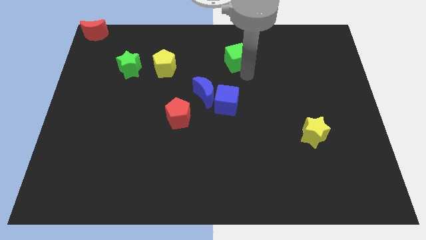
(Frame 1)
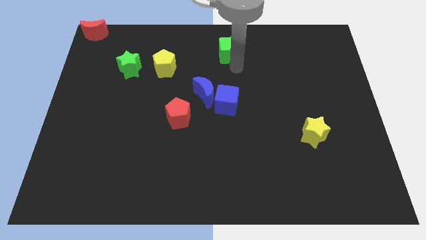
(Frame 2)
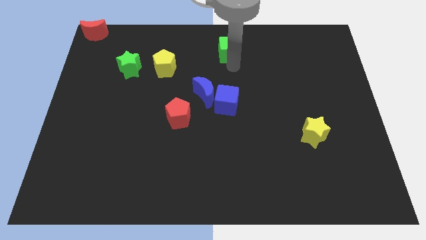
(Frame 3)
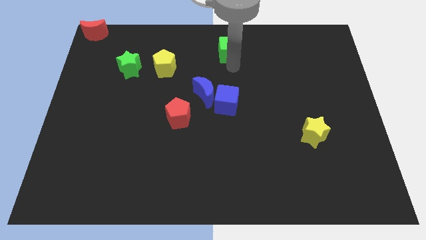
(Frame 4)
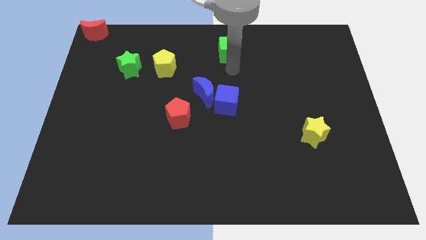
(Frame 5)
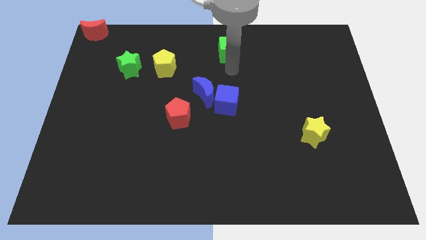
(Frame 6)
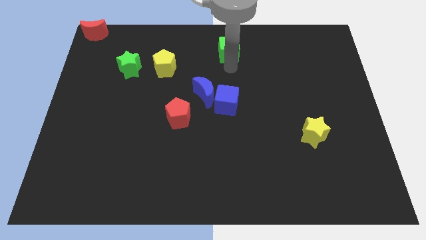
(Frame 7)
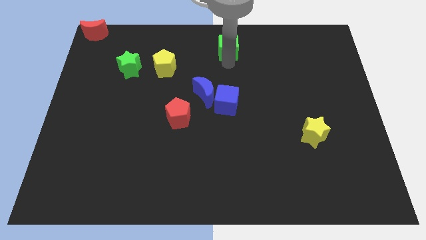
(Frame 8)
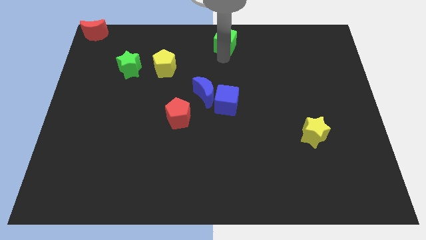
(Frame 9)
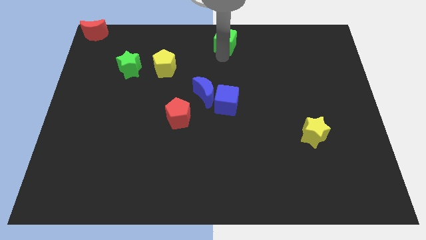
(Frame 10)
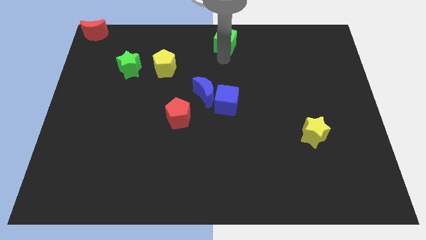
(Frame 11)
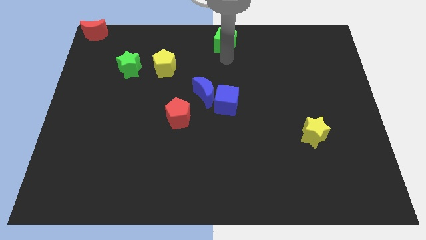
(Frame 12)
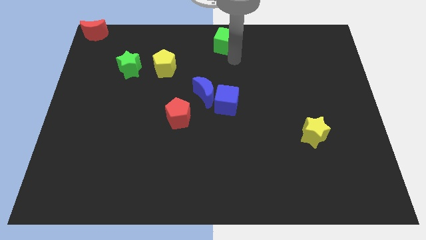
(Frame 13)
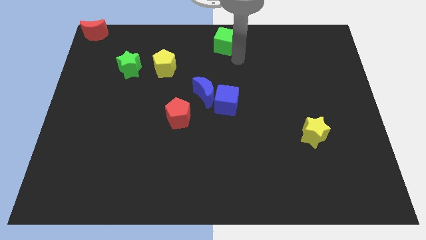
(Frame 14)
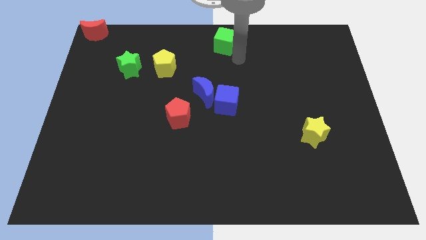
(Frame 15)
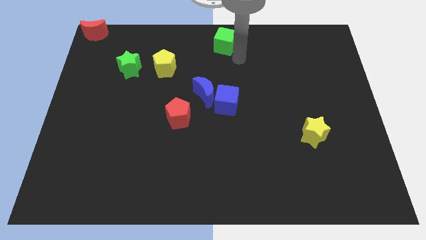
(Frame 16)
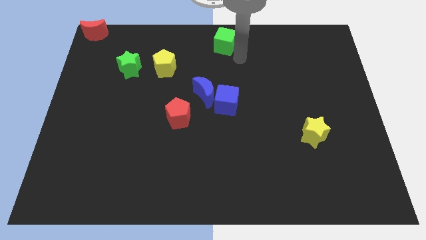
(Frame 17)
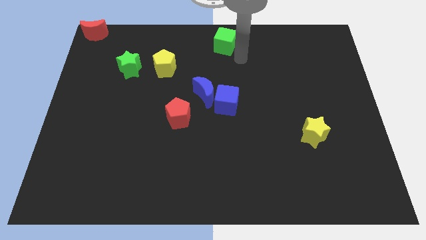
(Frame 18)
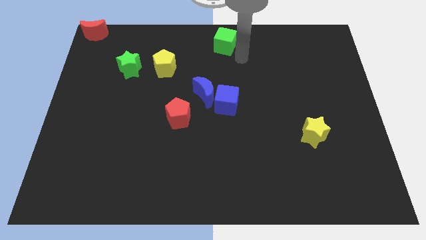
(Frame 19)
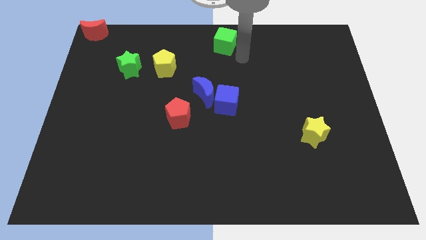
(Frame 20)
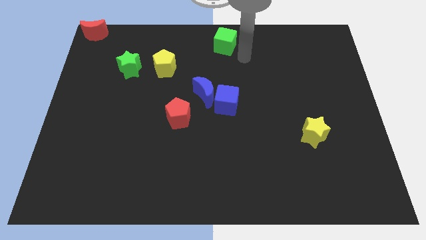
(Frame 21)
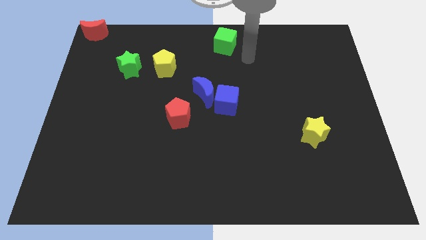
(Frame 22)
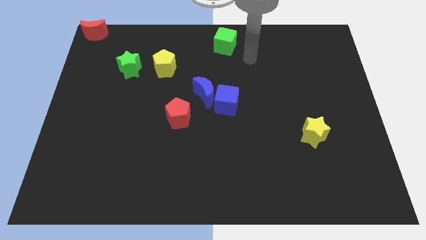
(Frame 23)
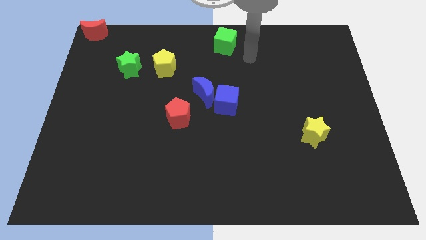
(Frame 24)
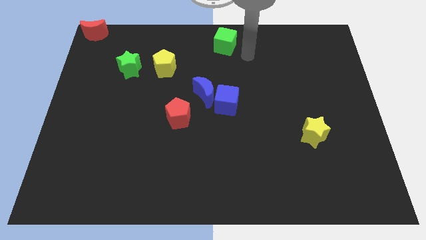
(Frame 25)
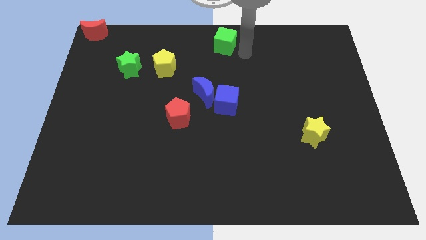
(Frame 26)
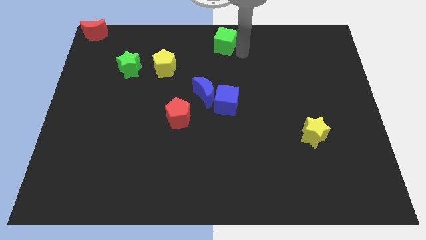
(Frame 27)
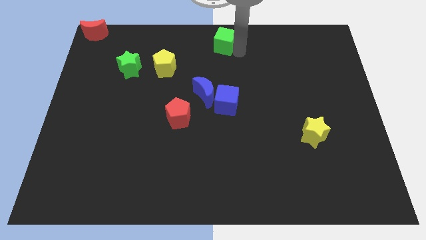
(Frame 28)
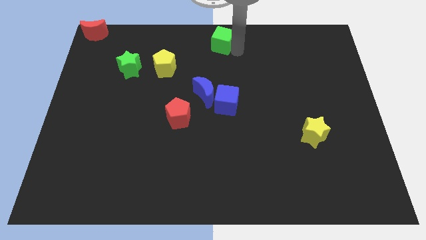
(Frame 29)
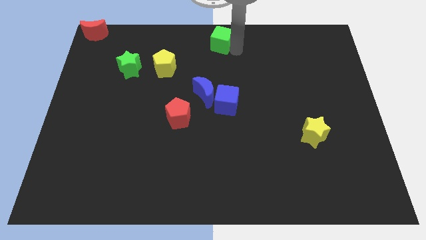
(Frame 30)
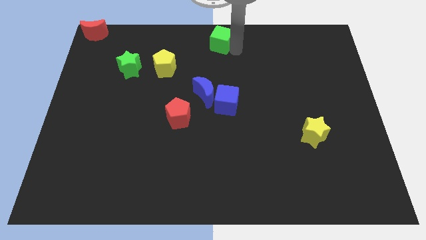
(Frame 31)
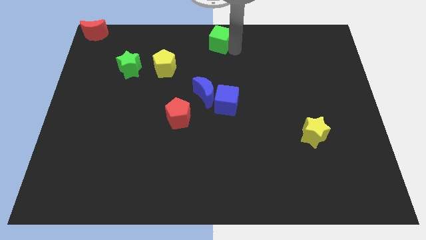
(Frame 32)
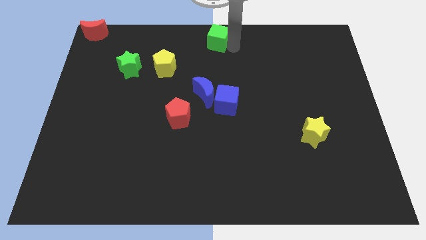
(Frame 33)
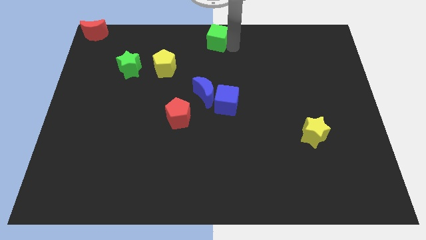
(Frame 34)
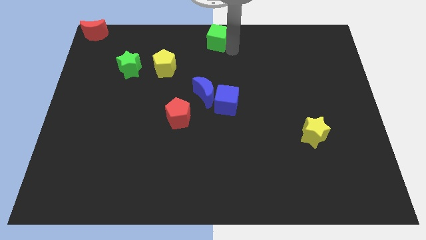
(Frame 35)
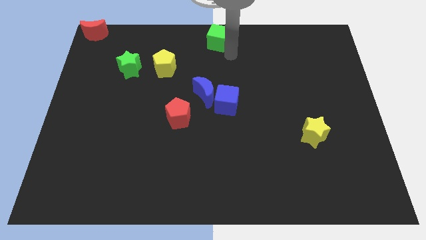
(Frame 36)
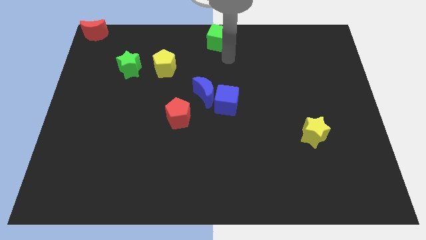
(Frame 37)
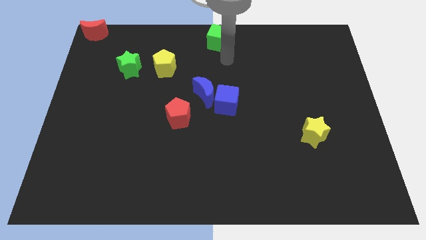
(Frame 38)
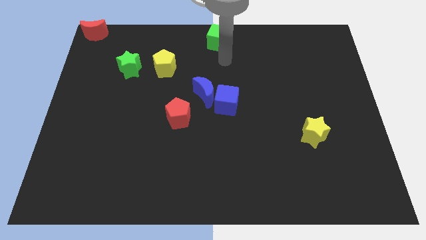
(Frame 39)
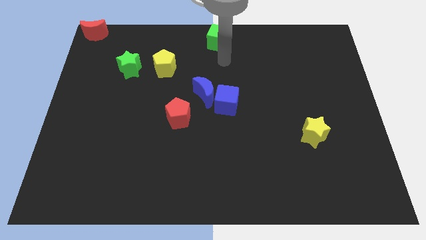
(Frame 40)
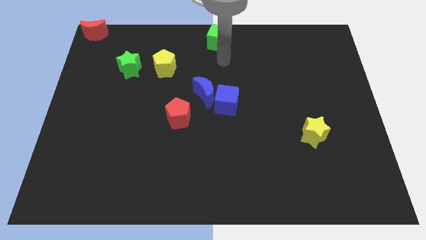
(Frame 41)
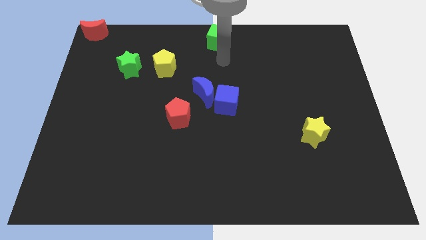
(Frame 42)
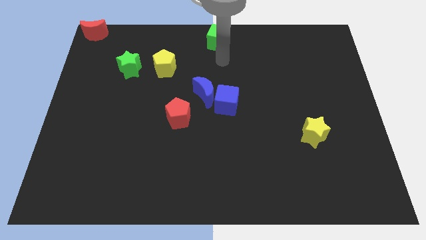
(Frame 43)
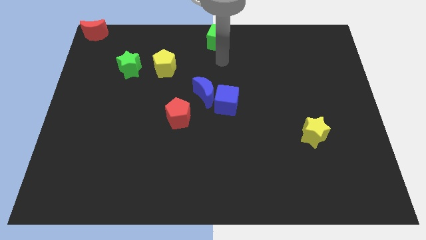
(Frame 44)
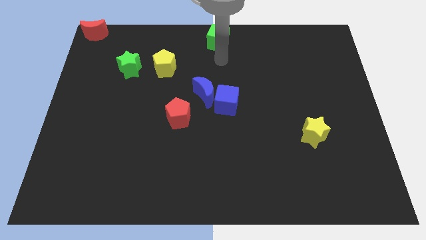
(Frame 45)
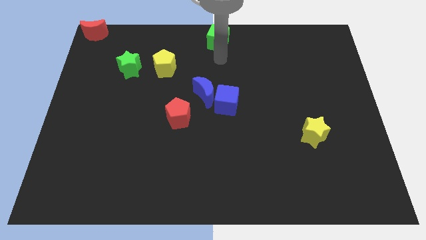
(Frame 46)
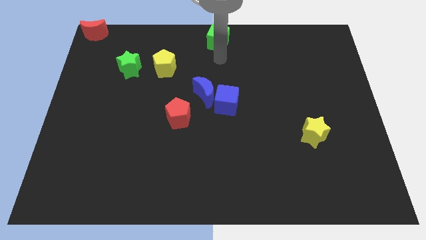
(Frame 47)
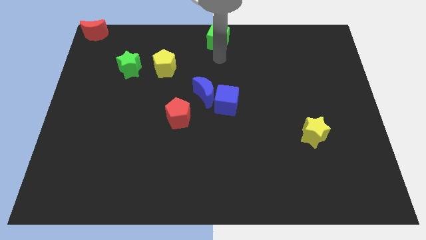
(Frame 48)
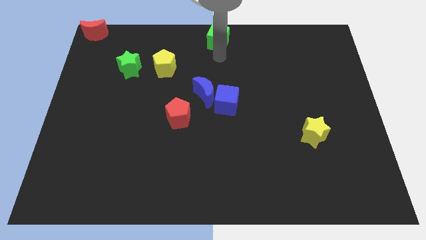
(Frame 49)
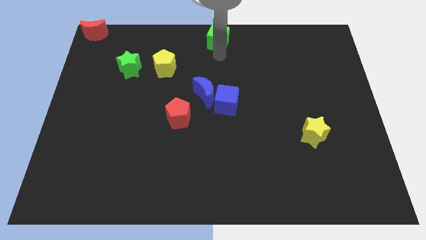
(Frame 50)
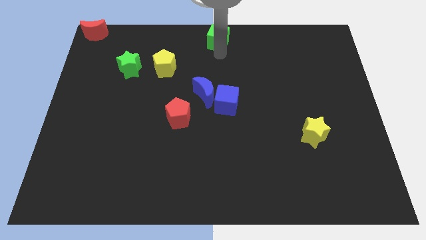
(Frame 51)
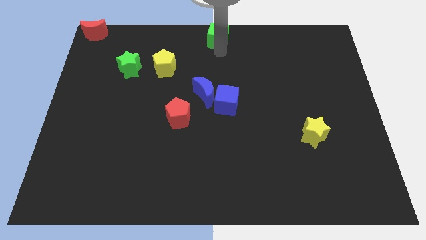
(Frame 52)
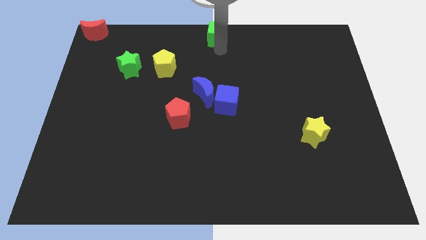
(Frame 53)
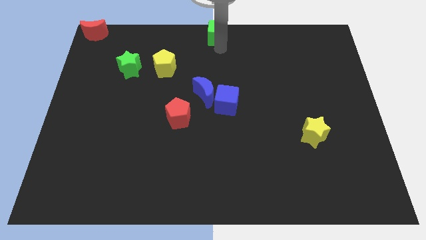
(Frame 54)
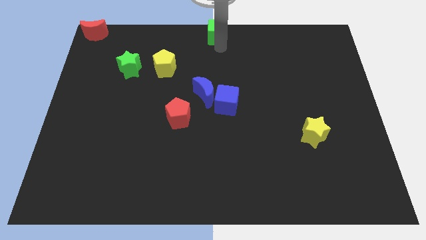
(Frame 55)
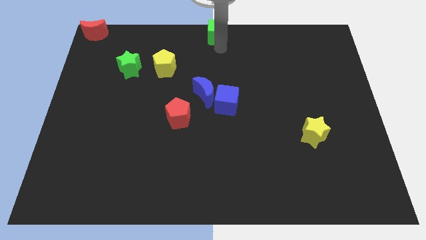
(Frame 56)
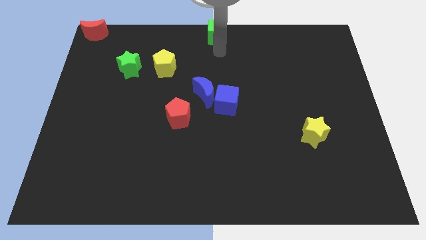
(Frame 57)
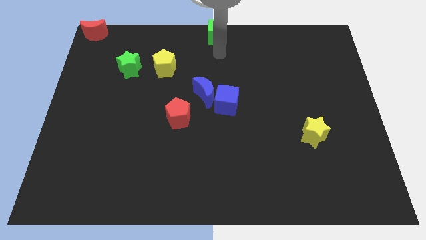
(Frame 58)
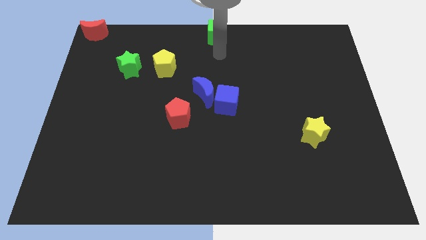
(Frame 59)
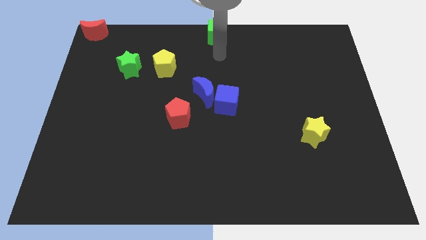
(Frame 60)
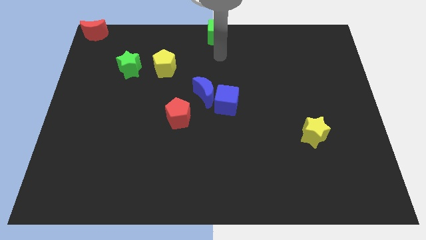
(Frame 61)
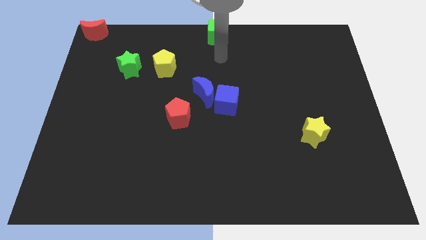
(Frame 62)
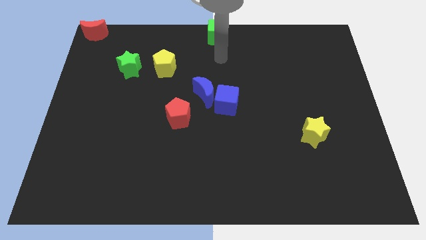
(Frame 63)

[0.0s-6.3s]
place the green cube above the blue crescent

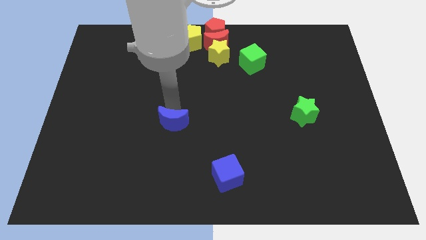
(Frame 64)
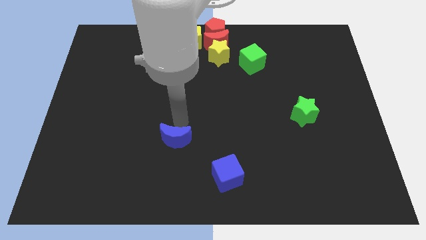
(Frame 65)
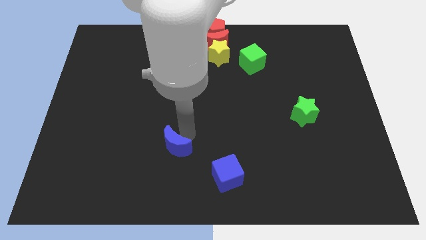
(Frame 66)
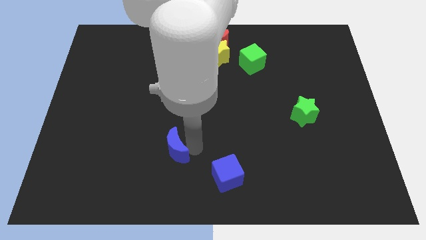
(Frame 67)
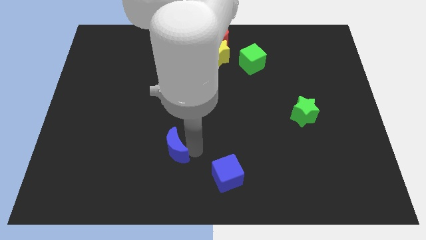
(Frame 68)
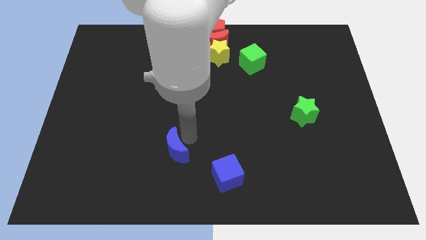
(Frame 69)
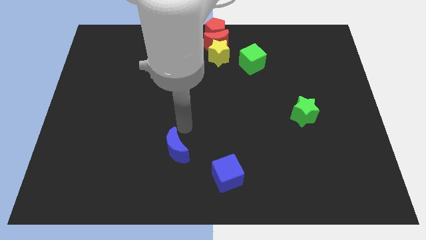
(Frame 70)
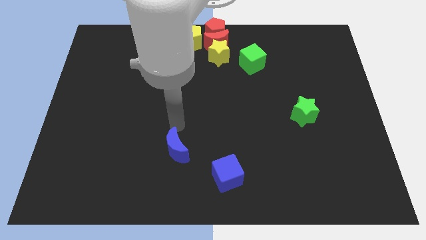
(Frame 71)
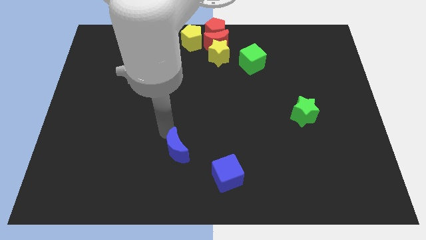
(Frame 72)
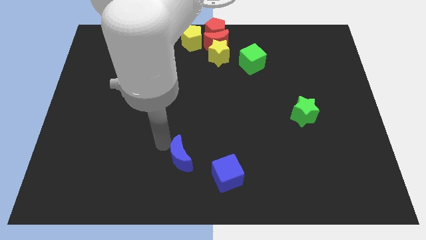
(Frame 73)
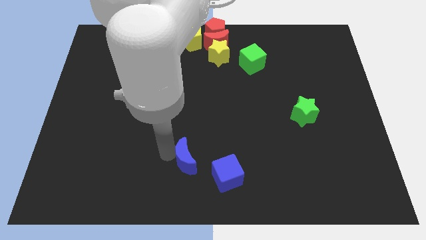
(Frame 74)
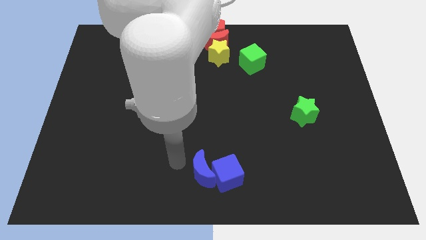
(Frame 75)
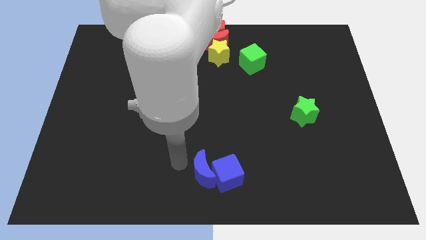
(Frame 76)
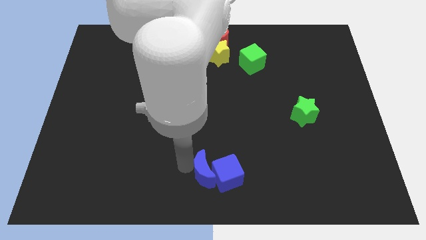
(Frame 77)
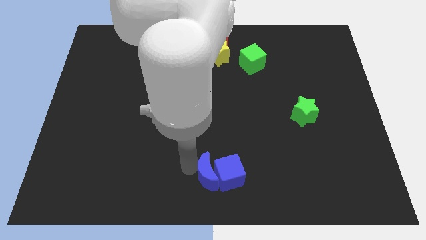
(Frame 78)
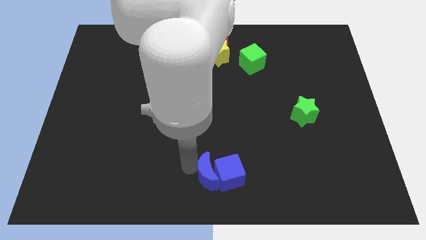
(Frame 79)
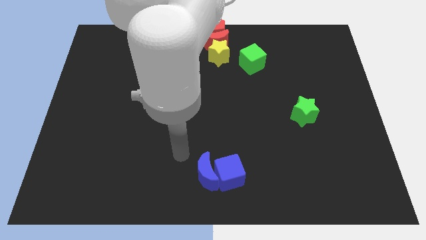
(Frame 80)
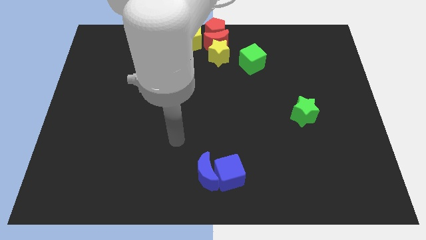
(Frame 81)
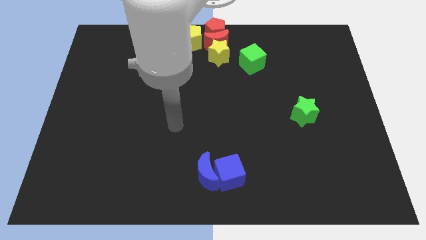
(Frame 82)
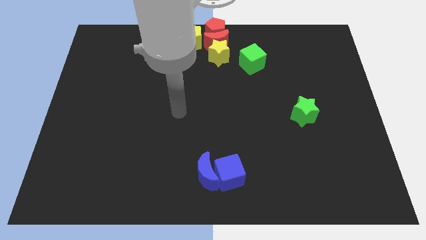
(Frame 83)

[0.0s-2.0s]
move blue crescent towards the blue cube

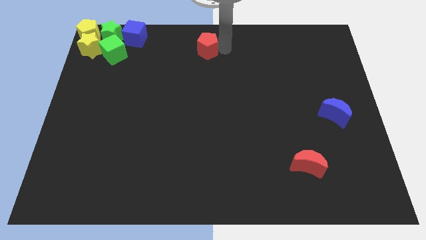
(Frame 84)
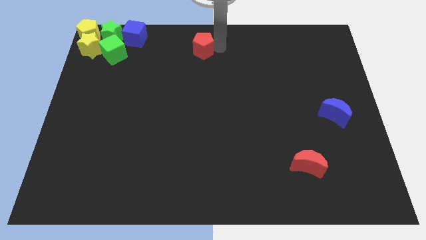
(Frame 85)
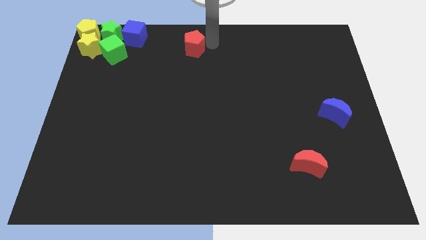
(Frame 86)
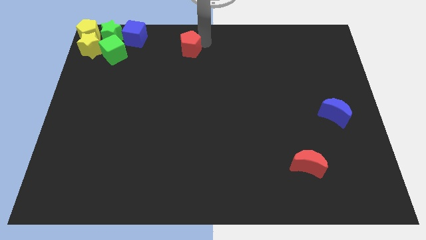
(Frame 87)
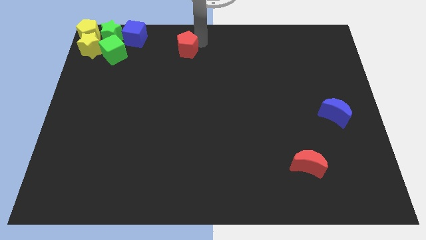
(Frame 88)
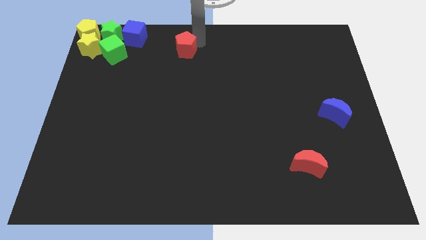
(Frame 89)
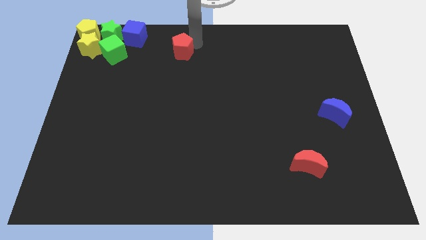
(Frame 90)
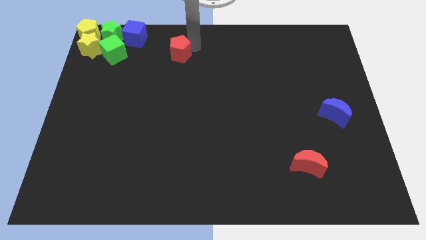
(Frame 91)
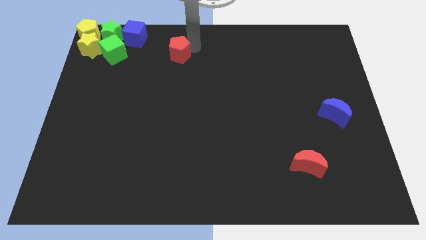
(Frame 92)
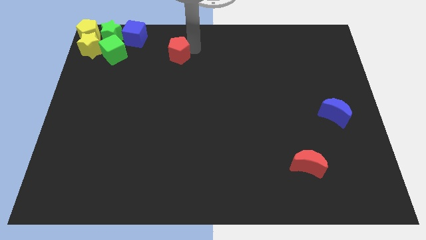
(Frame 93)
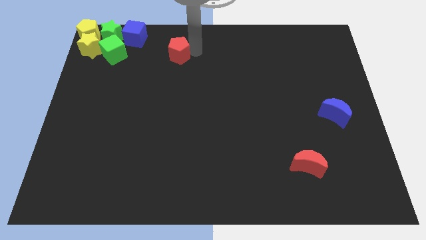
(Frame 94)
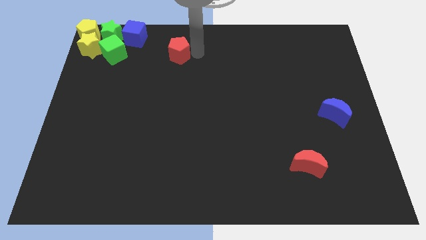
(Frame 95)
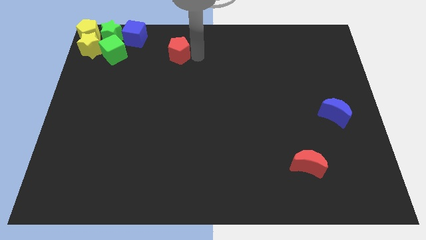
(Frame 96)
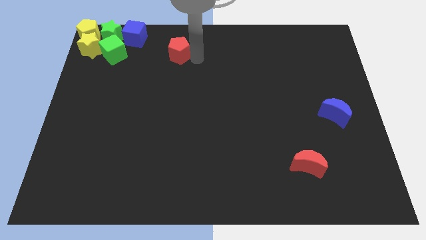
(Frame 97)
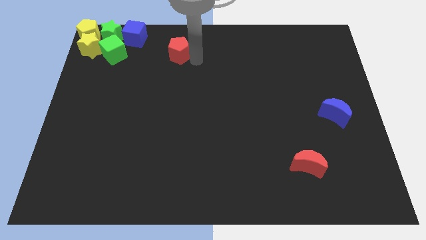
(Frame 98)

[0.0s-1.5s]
move the red pentagon diagonal to the right of the green cube
